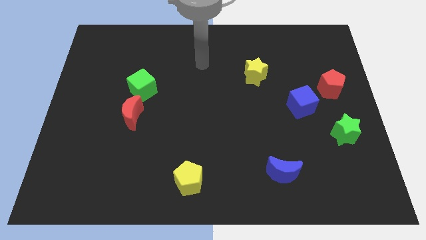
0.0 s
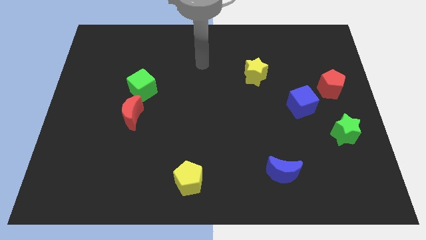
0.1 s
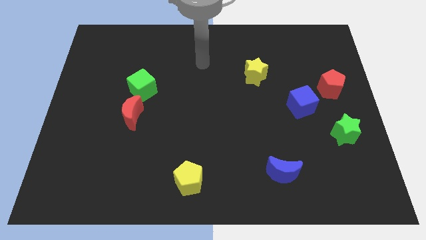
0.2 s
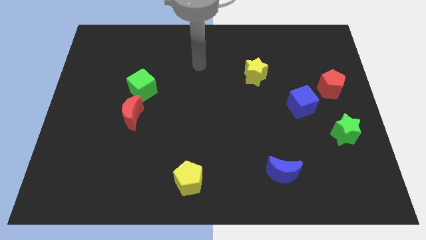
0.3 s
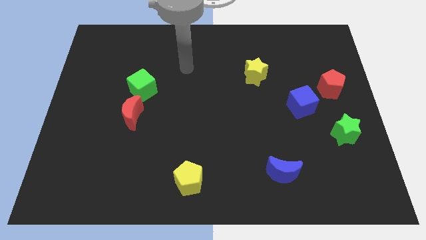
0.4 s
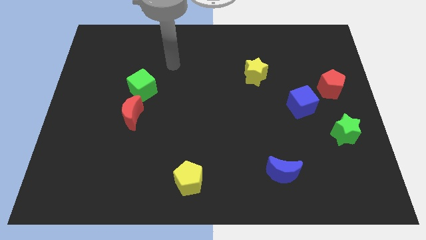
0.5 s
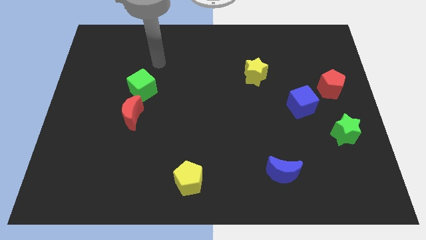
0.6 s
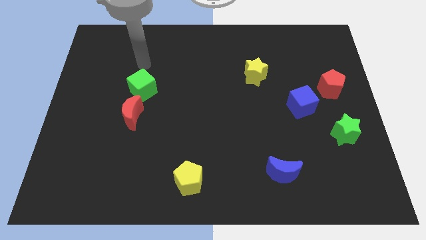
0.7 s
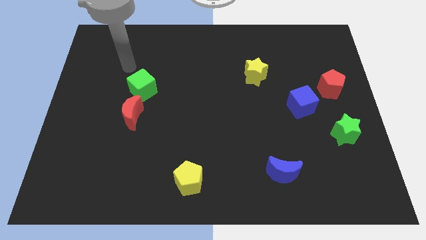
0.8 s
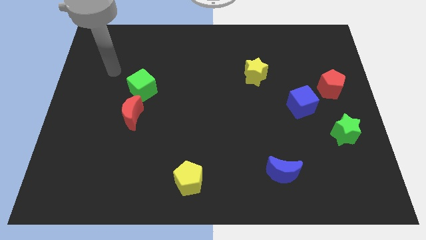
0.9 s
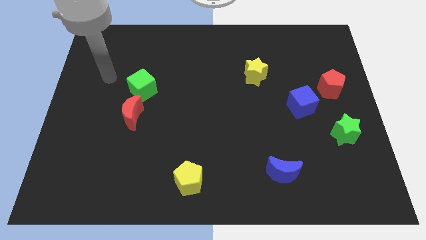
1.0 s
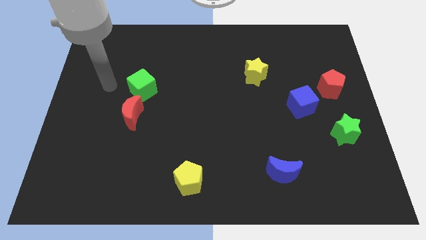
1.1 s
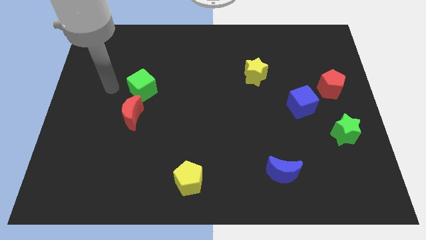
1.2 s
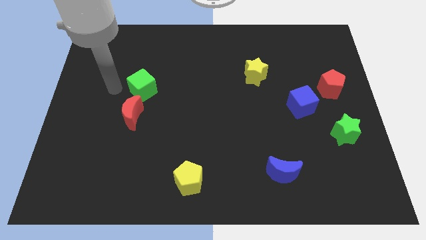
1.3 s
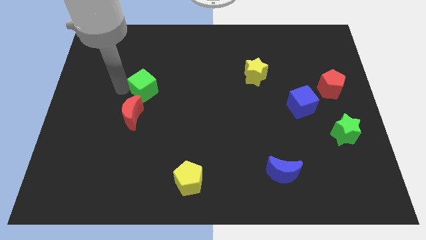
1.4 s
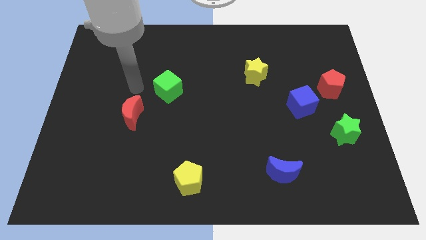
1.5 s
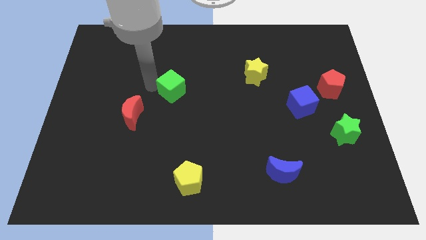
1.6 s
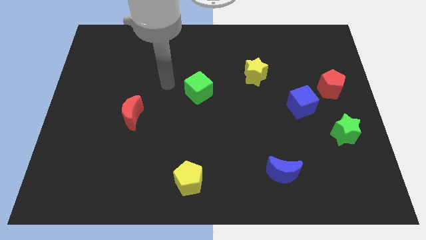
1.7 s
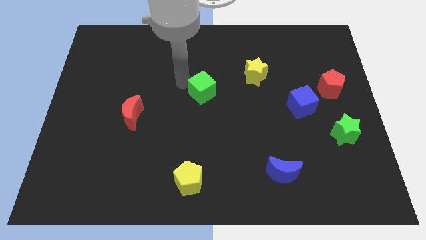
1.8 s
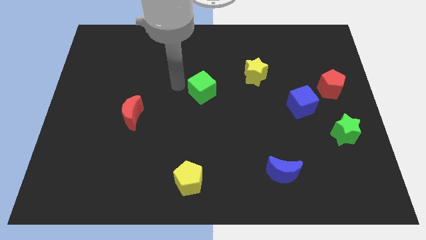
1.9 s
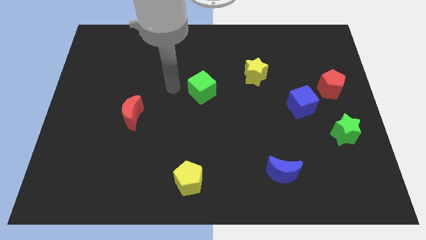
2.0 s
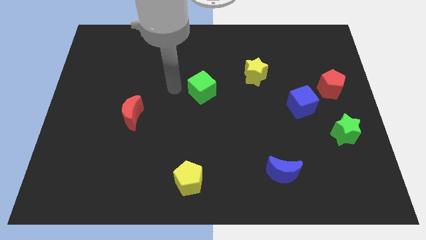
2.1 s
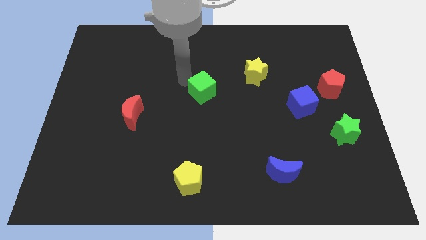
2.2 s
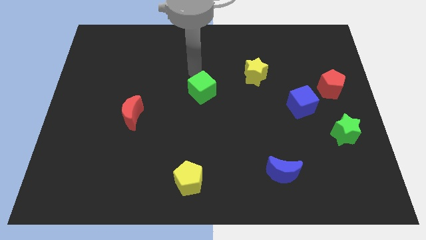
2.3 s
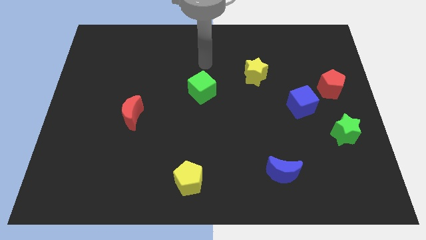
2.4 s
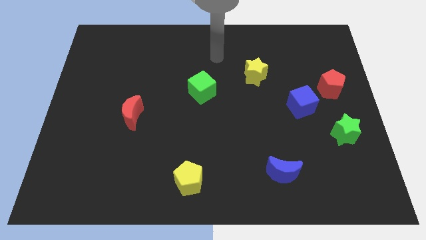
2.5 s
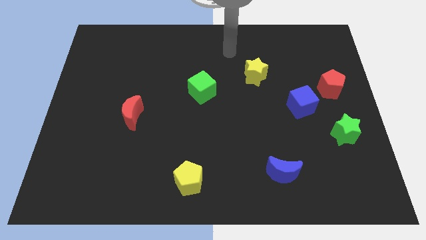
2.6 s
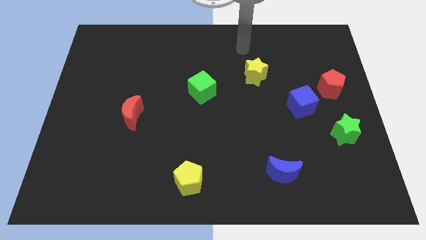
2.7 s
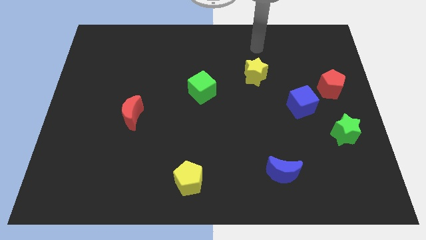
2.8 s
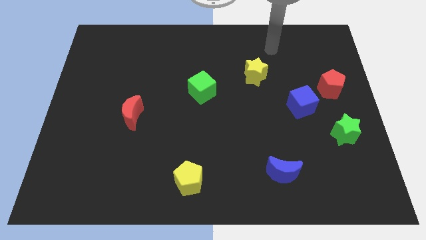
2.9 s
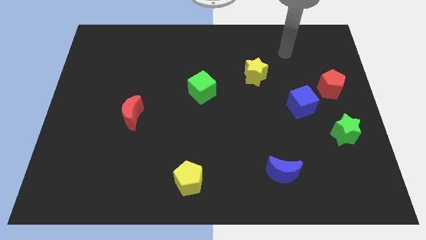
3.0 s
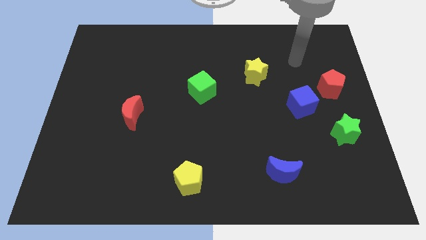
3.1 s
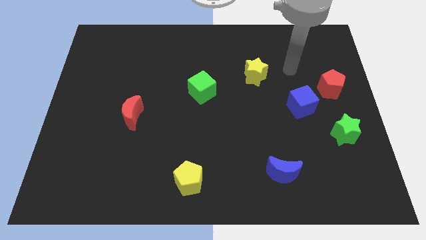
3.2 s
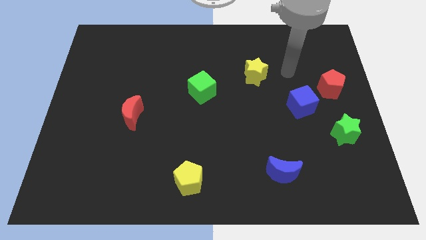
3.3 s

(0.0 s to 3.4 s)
move the green cube towards the center

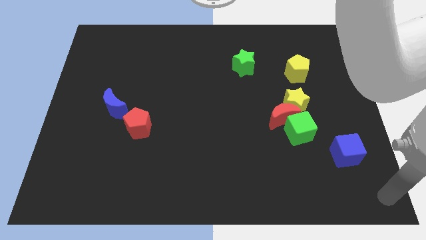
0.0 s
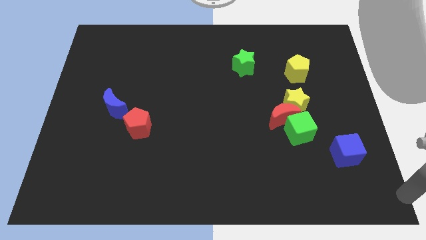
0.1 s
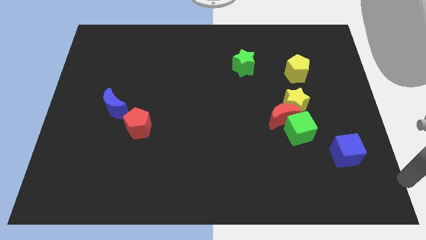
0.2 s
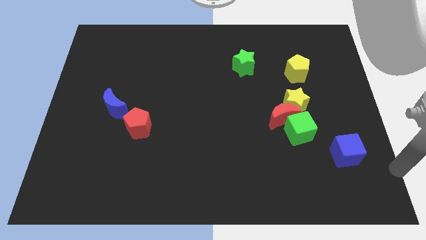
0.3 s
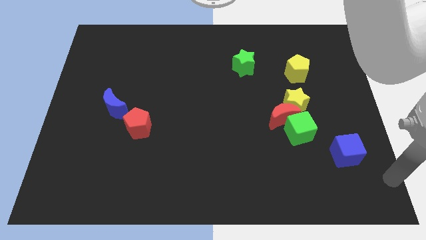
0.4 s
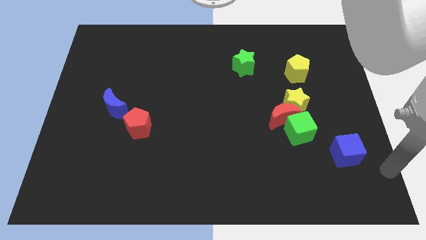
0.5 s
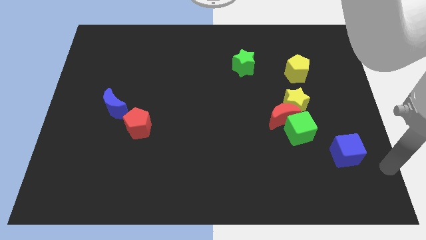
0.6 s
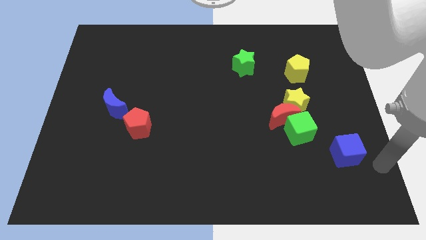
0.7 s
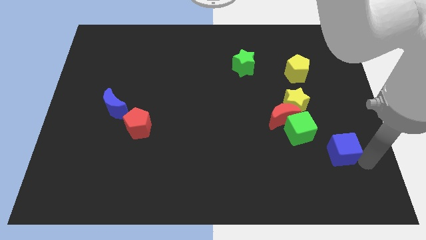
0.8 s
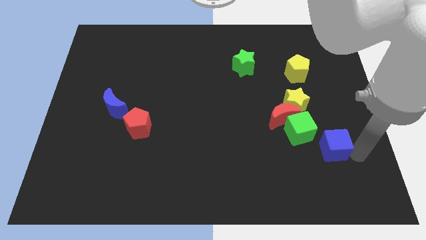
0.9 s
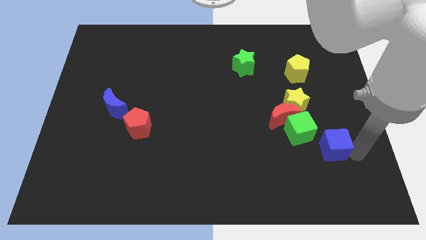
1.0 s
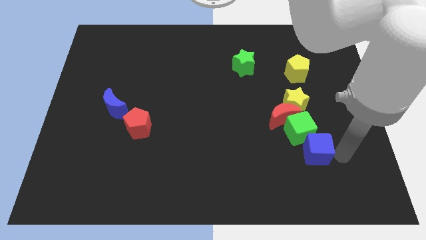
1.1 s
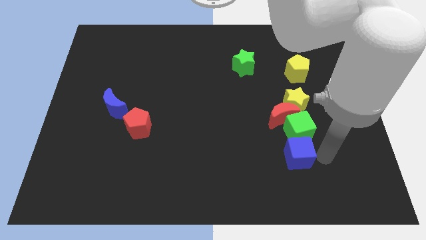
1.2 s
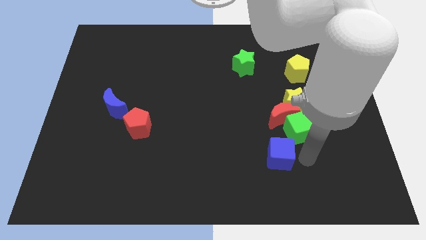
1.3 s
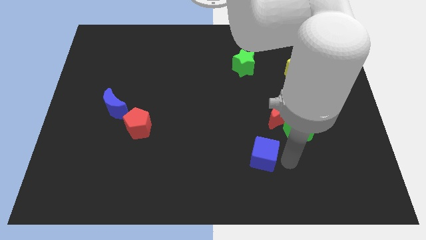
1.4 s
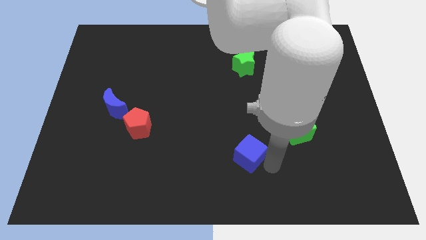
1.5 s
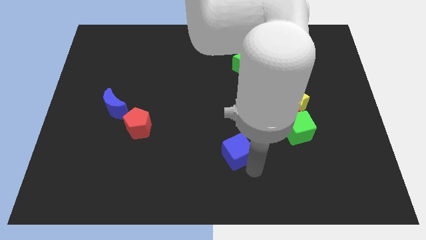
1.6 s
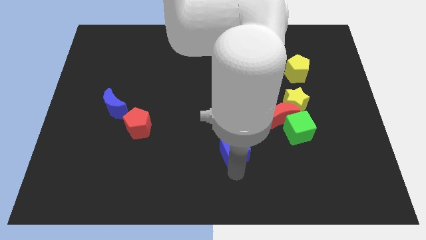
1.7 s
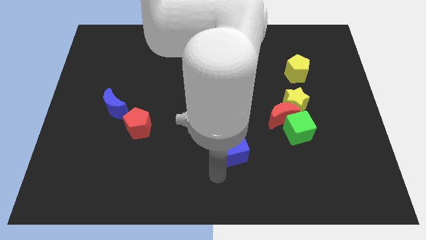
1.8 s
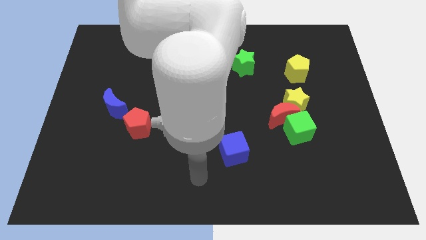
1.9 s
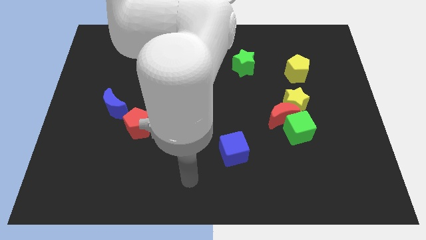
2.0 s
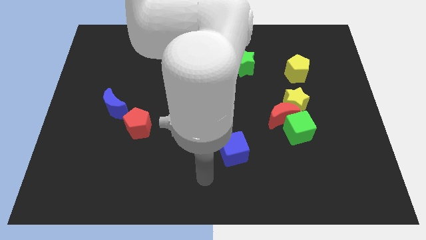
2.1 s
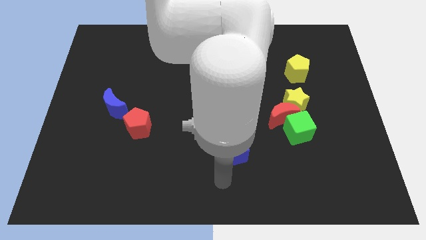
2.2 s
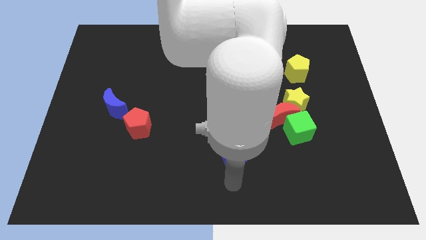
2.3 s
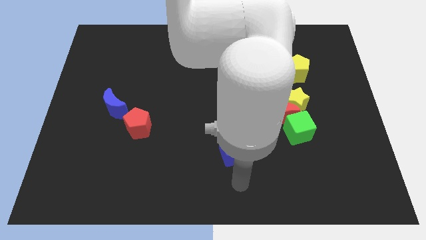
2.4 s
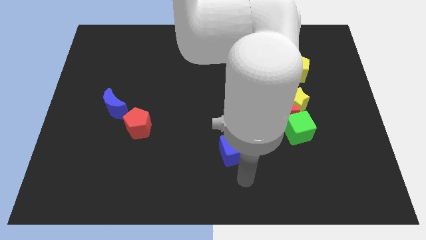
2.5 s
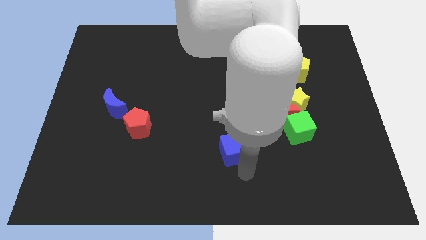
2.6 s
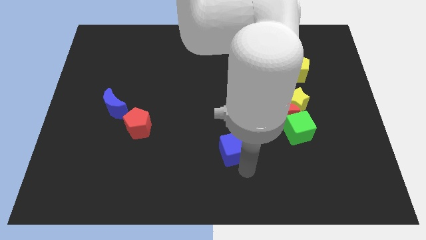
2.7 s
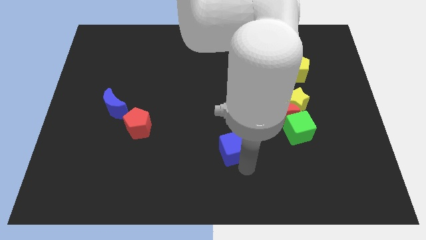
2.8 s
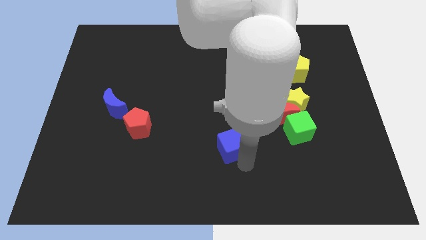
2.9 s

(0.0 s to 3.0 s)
move the blue cube diagonol to the red moon

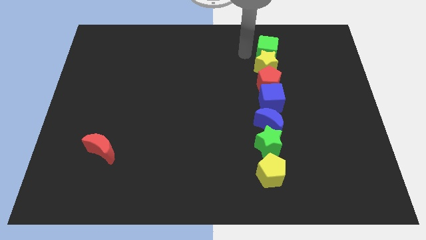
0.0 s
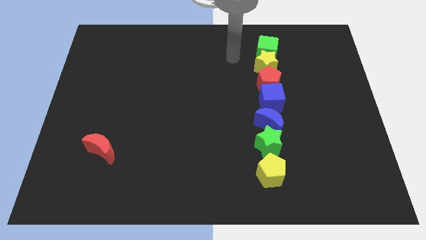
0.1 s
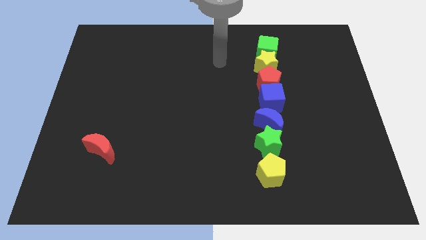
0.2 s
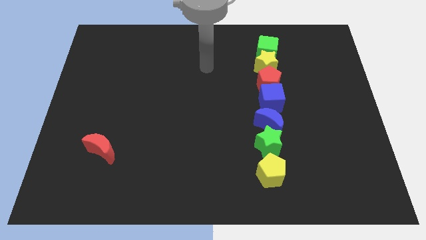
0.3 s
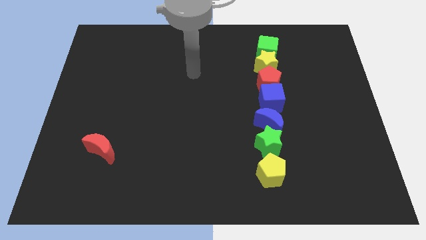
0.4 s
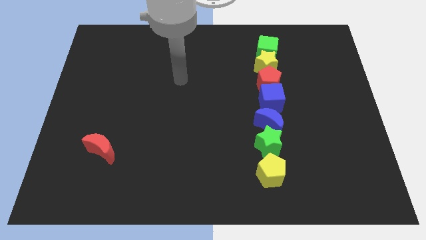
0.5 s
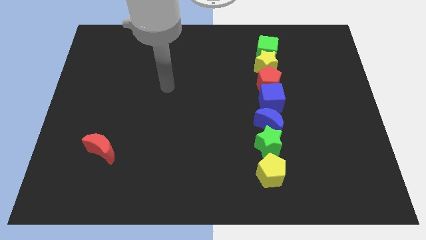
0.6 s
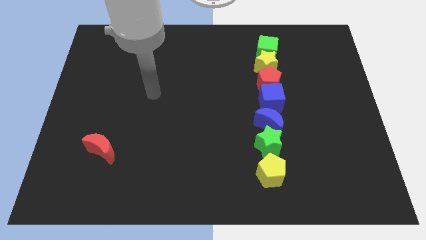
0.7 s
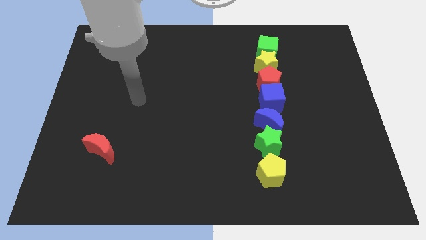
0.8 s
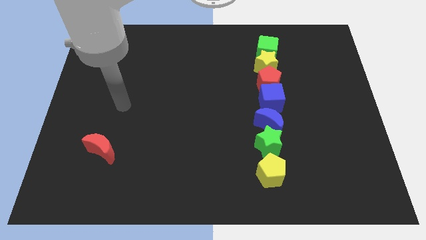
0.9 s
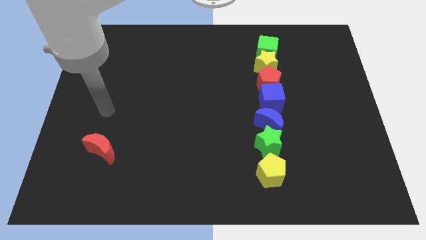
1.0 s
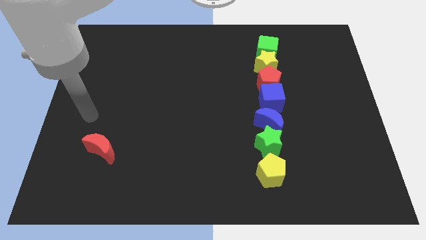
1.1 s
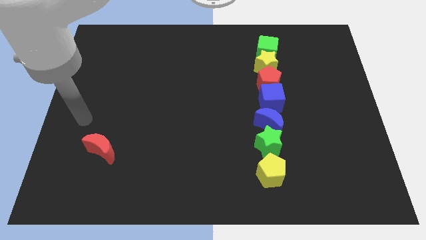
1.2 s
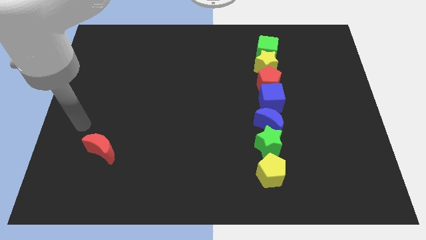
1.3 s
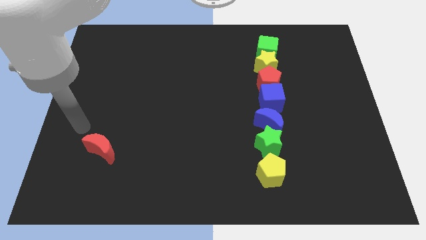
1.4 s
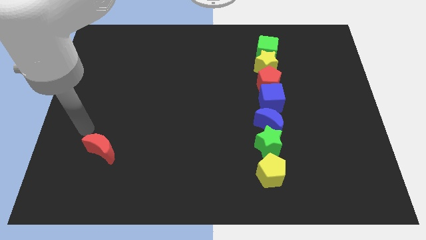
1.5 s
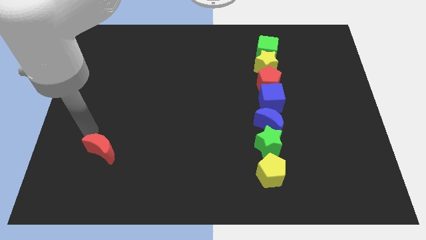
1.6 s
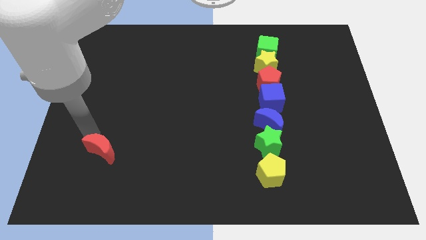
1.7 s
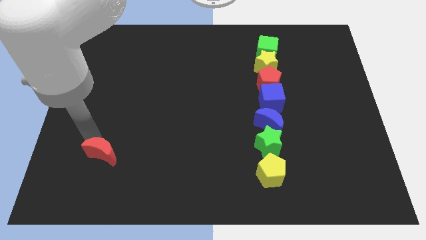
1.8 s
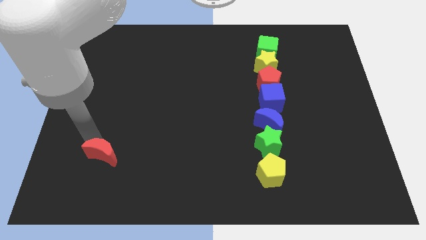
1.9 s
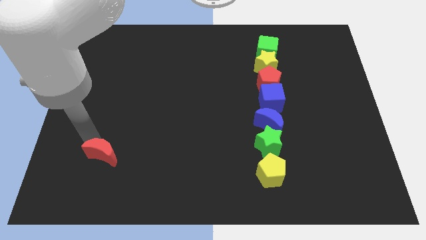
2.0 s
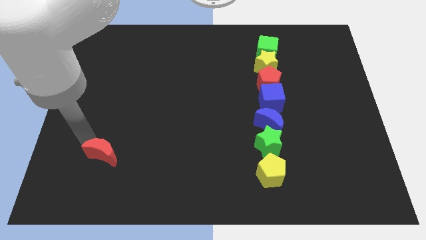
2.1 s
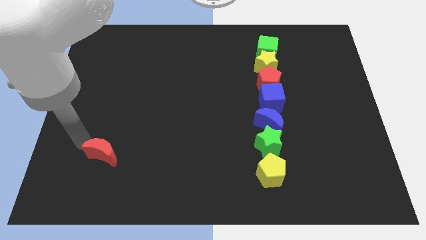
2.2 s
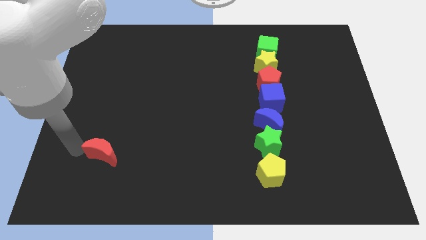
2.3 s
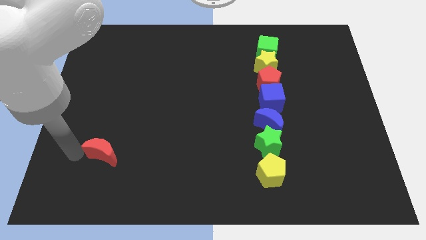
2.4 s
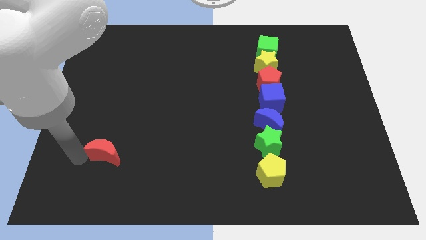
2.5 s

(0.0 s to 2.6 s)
move arm near red moon
